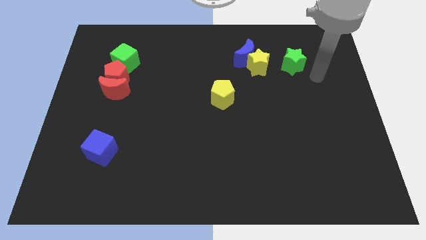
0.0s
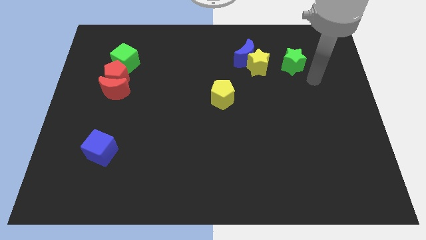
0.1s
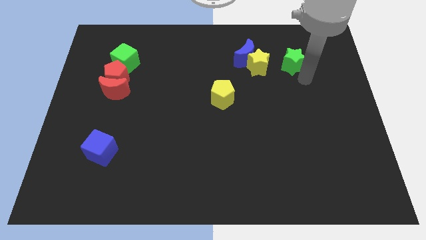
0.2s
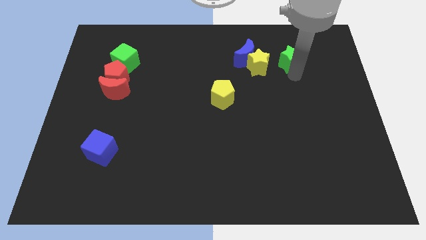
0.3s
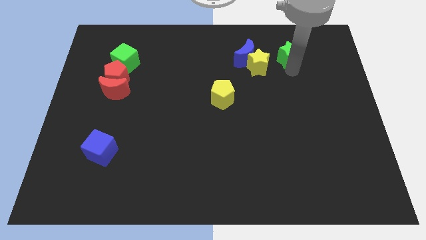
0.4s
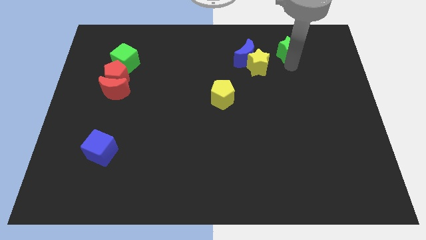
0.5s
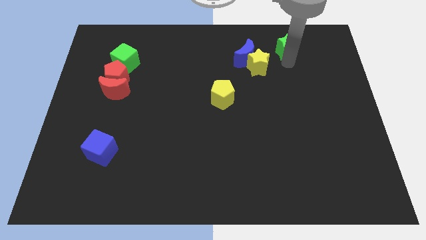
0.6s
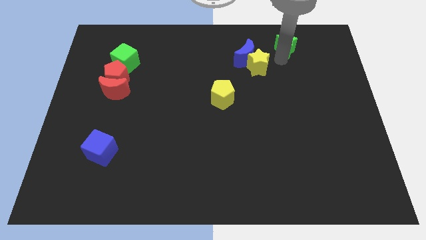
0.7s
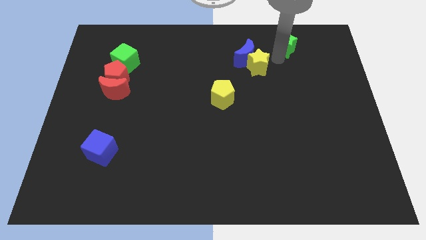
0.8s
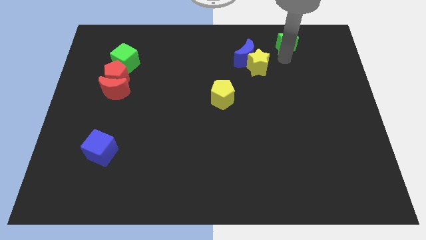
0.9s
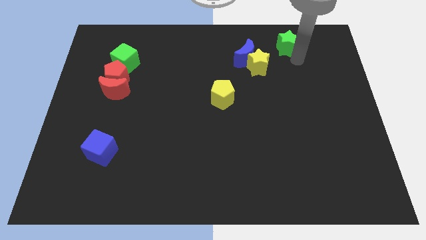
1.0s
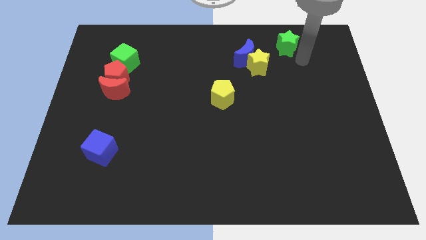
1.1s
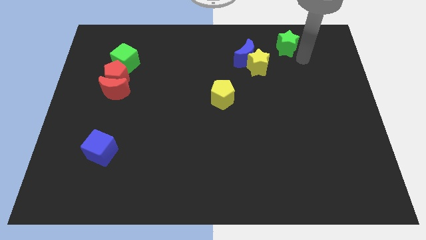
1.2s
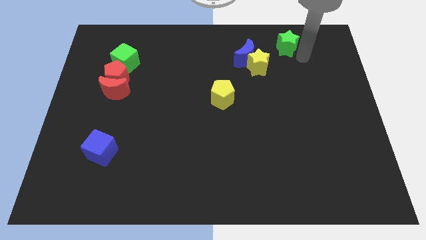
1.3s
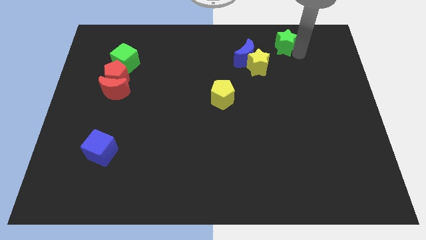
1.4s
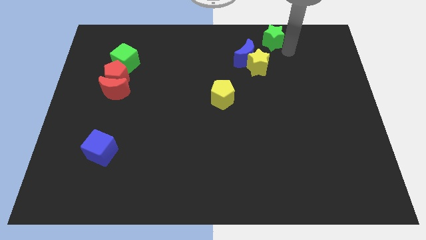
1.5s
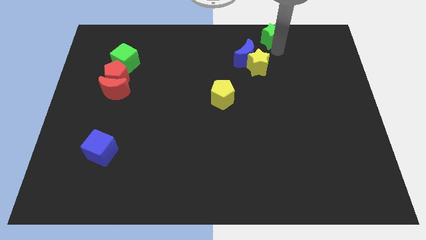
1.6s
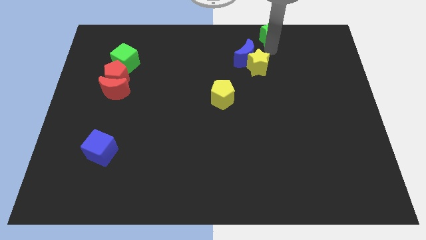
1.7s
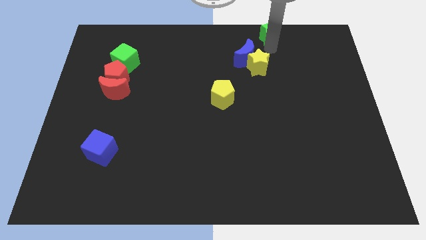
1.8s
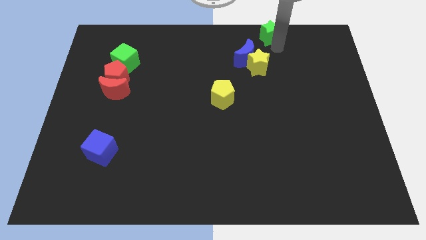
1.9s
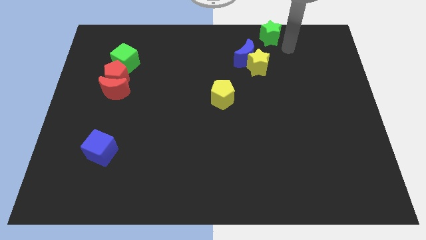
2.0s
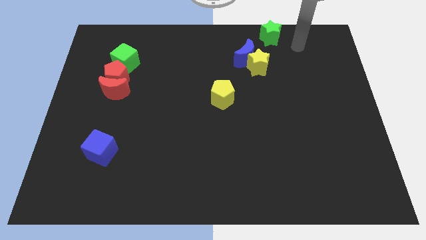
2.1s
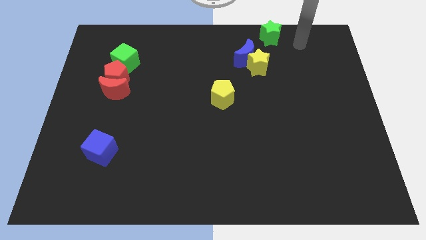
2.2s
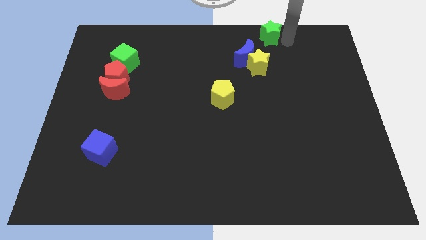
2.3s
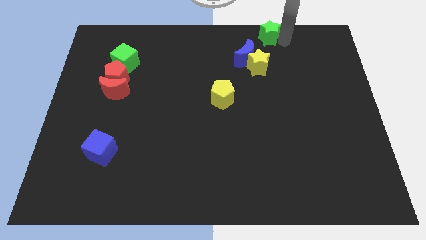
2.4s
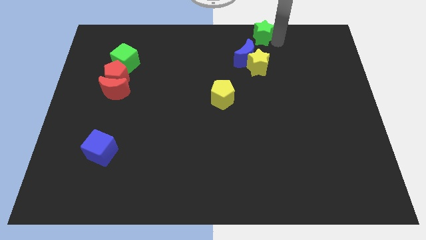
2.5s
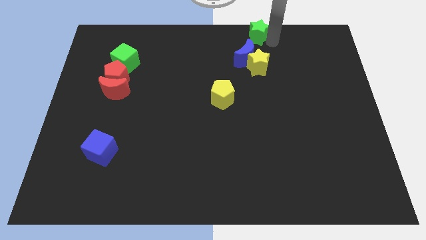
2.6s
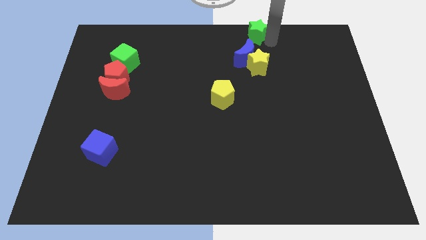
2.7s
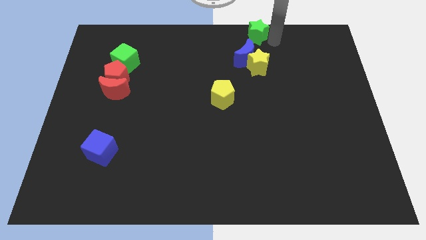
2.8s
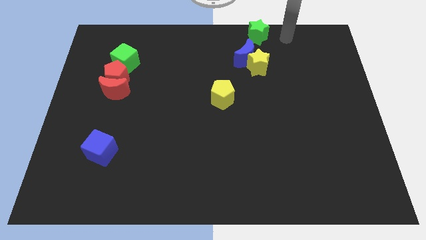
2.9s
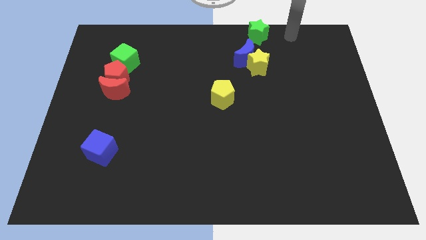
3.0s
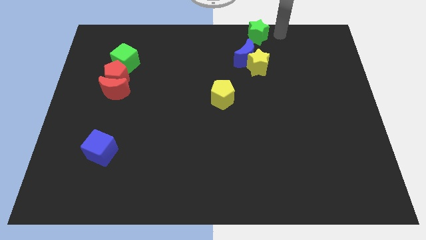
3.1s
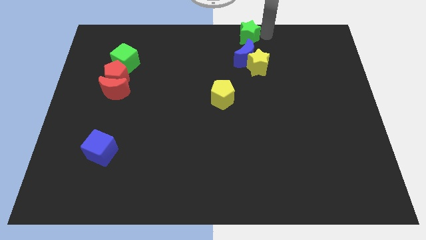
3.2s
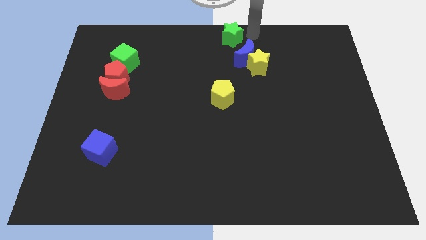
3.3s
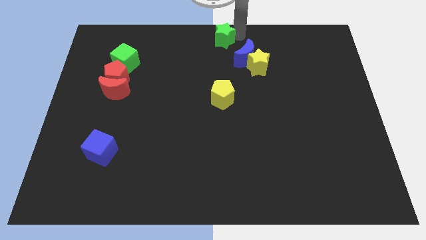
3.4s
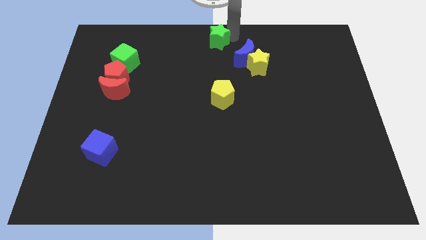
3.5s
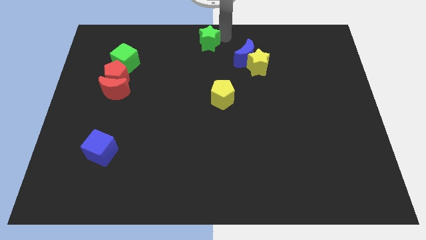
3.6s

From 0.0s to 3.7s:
move the green star to the top center of the board

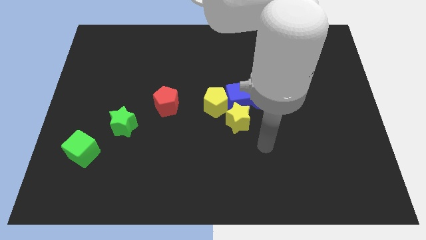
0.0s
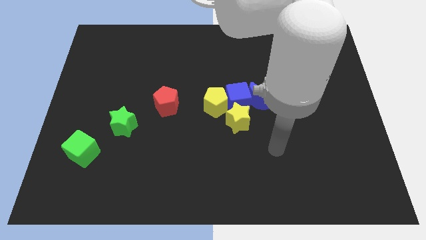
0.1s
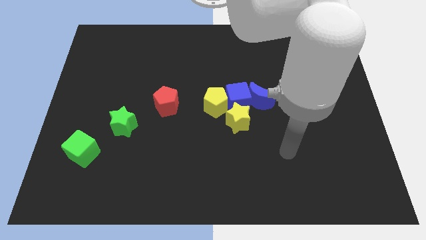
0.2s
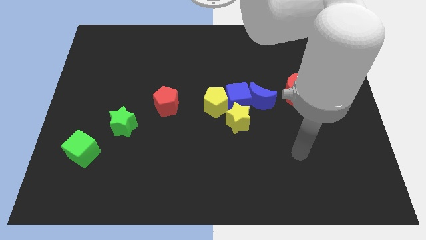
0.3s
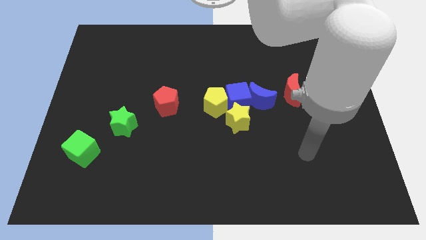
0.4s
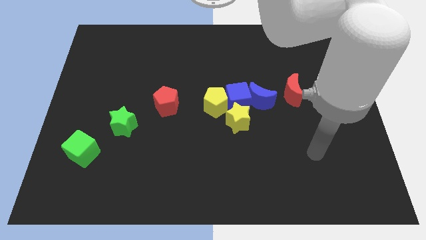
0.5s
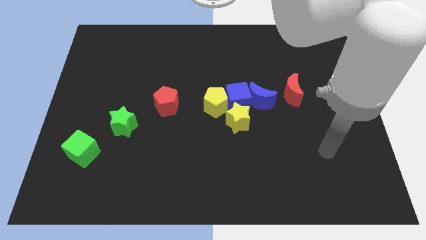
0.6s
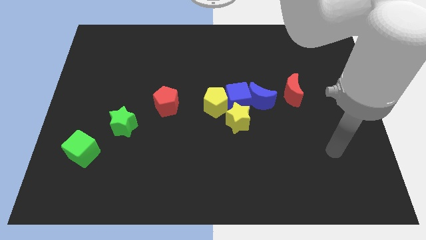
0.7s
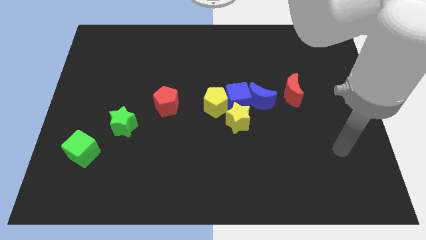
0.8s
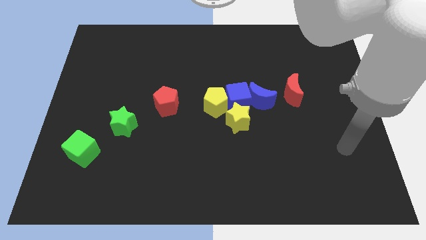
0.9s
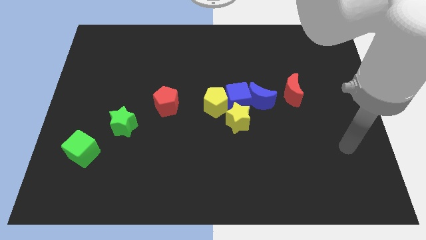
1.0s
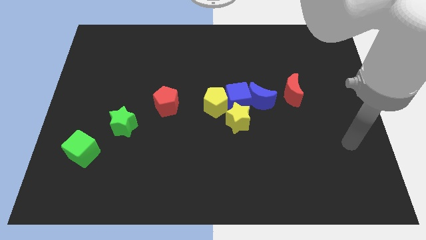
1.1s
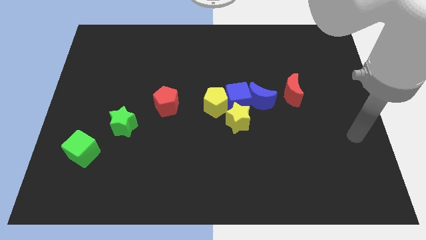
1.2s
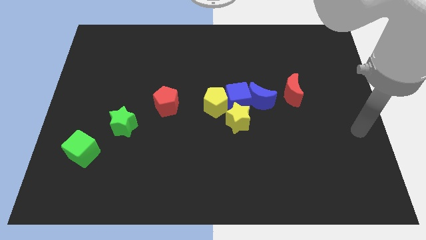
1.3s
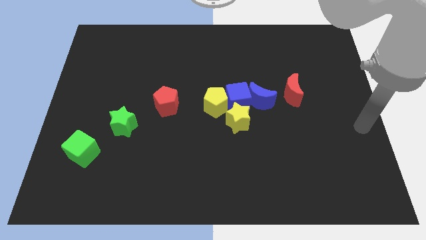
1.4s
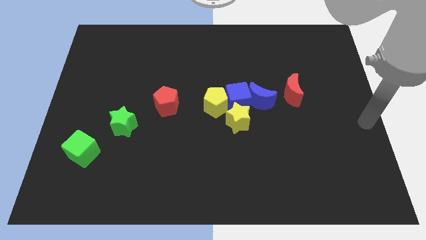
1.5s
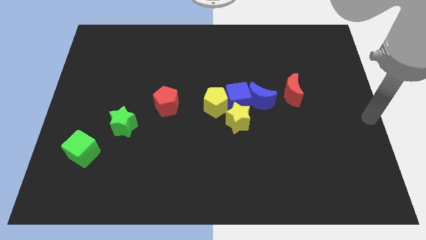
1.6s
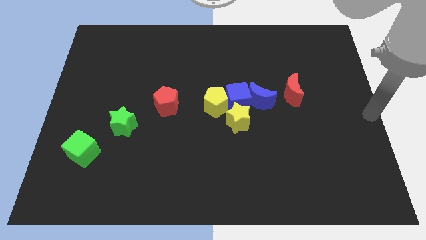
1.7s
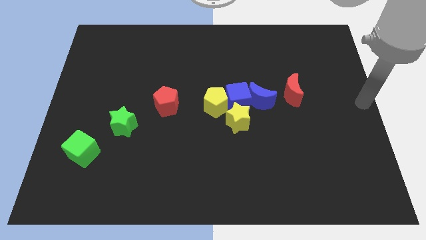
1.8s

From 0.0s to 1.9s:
place your arm at the right center of the board

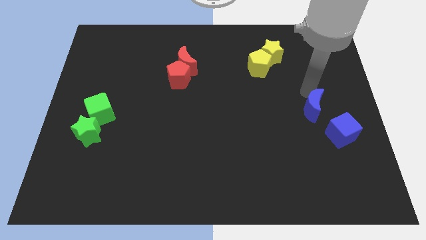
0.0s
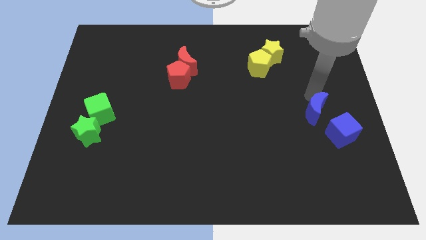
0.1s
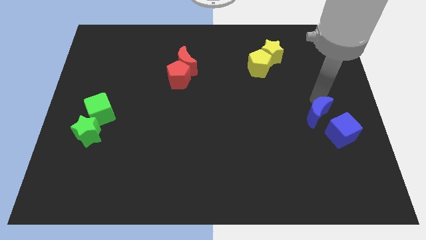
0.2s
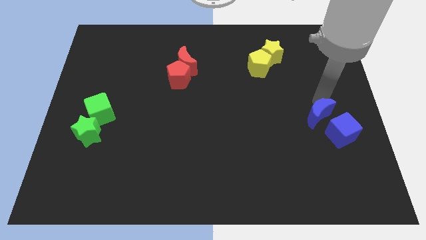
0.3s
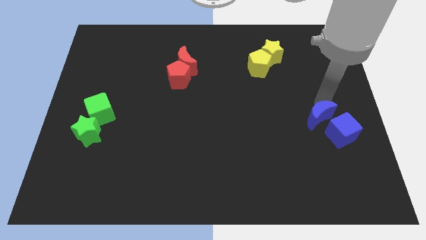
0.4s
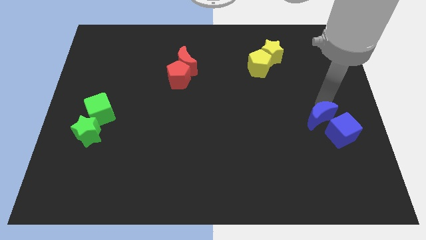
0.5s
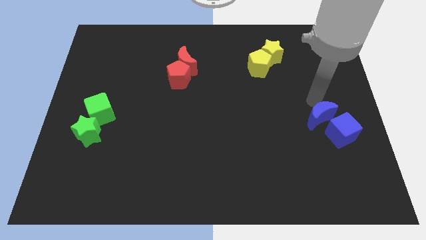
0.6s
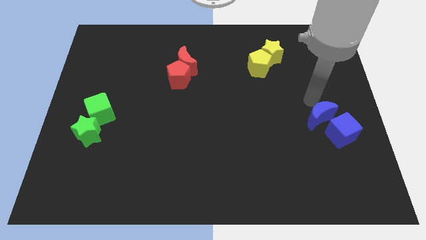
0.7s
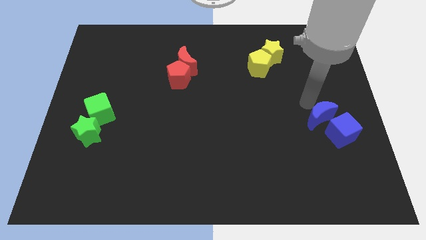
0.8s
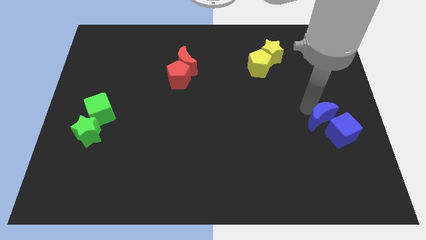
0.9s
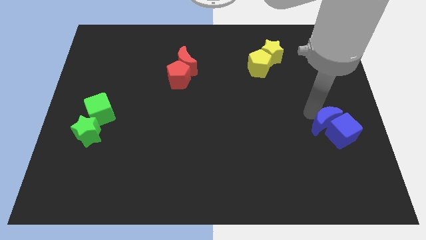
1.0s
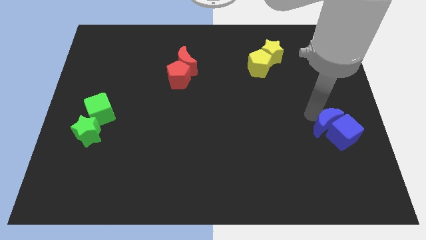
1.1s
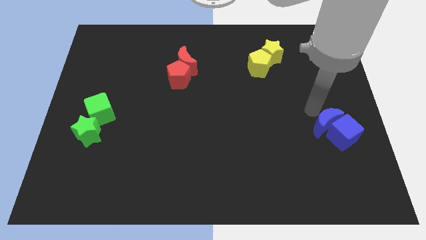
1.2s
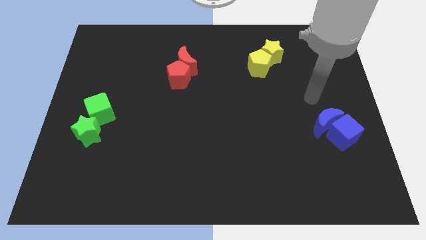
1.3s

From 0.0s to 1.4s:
place the blue moon into the blue cube

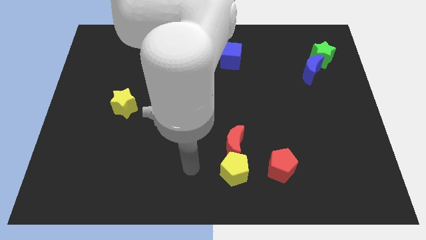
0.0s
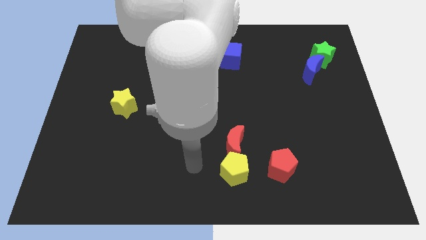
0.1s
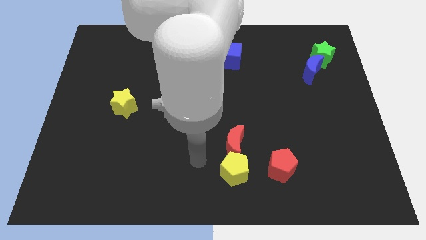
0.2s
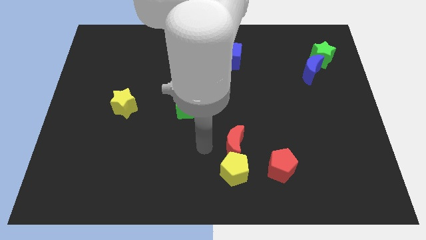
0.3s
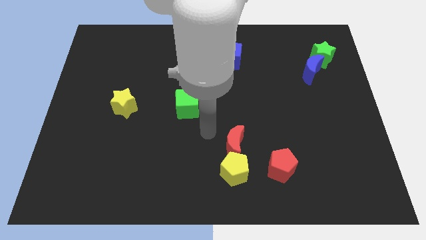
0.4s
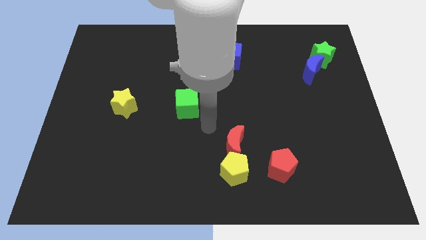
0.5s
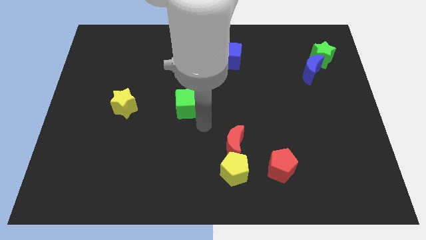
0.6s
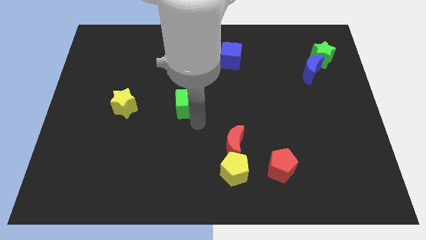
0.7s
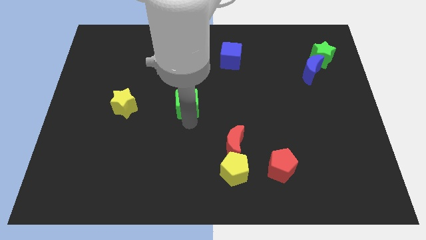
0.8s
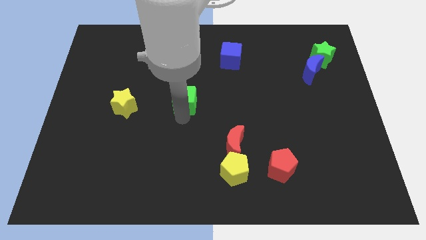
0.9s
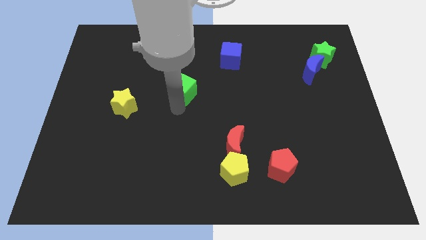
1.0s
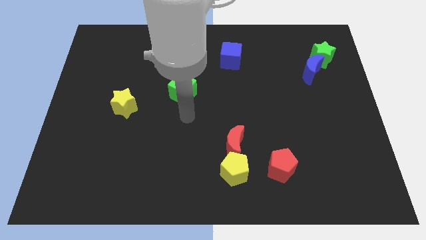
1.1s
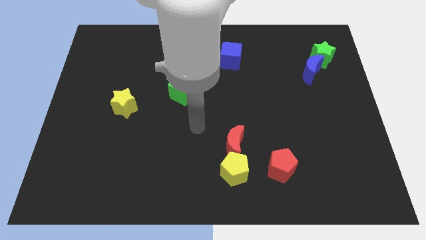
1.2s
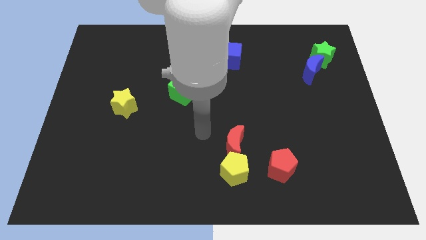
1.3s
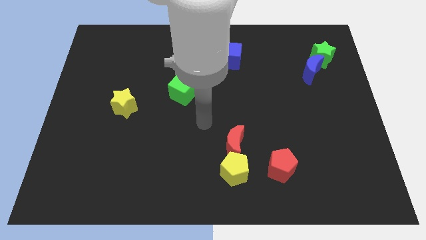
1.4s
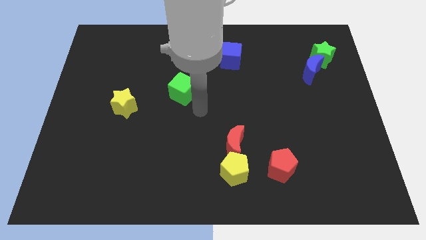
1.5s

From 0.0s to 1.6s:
push the green cube up slightly

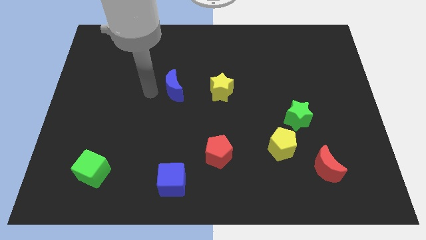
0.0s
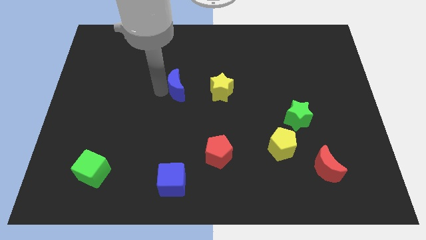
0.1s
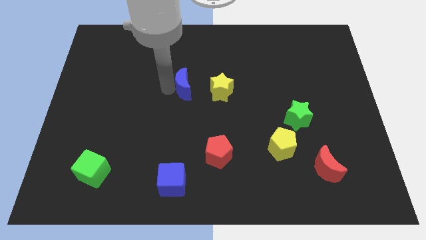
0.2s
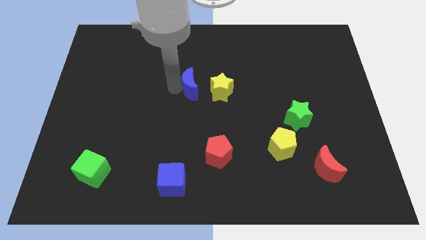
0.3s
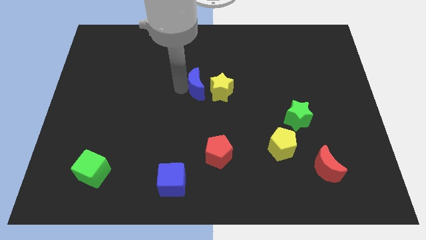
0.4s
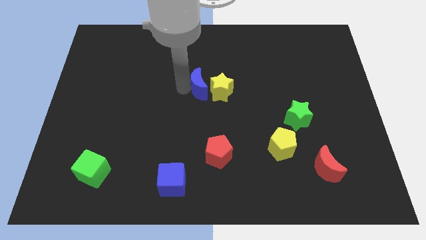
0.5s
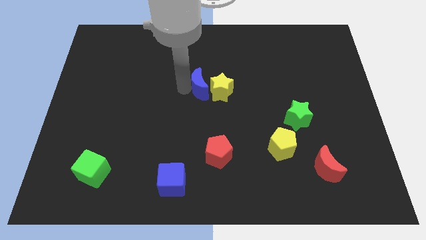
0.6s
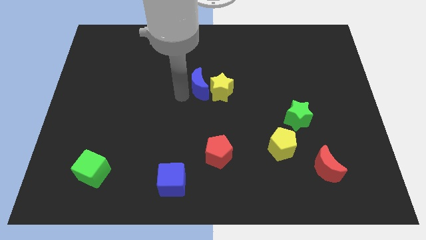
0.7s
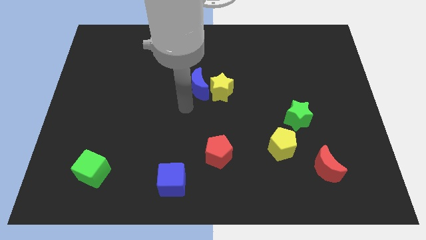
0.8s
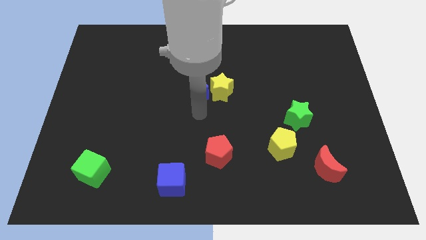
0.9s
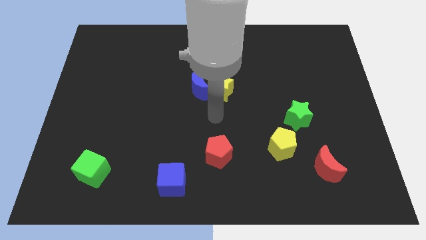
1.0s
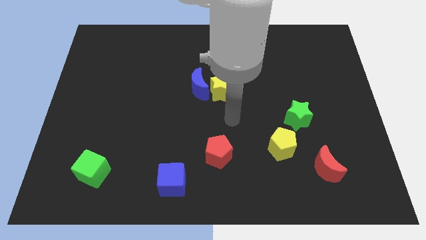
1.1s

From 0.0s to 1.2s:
put the blue moon to the left side of yellow star
